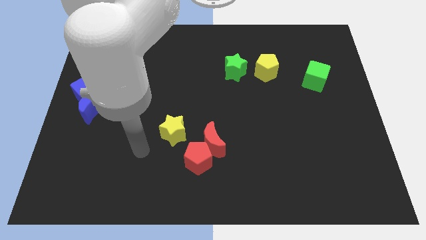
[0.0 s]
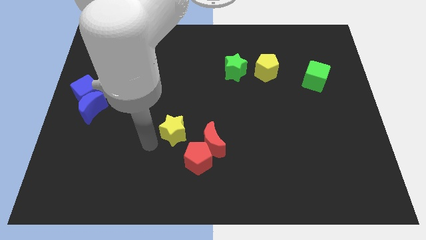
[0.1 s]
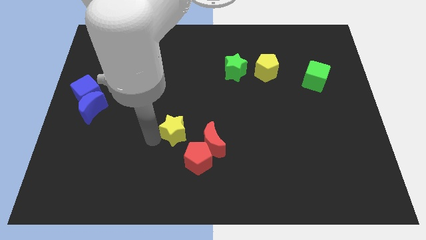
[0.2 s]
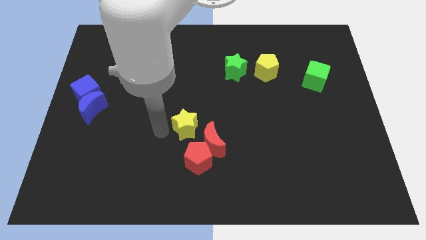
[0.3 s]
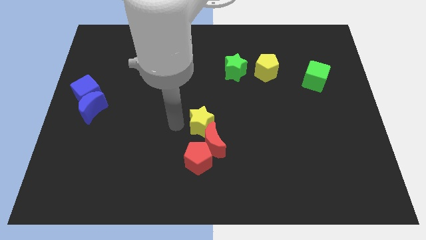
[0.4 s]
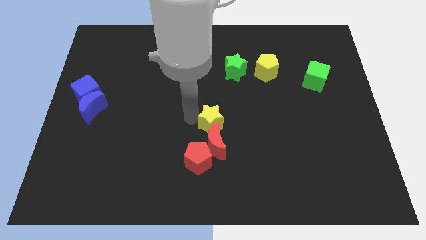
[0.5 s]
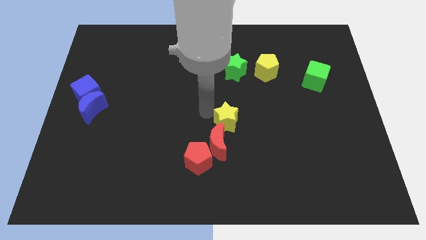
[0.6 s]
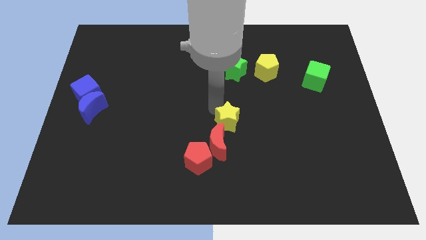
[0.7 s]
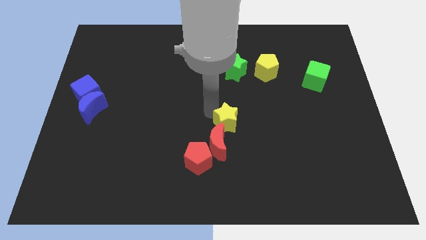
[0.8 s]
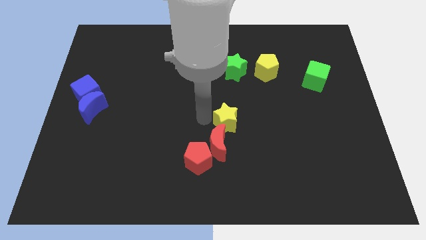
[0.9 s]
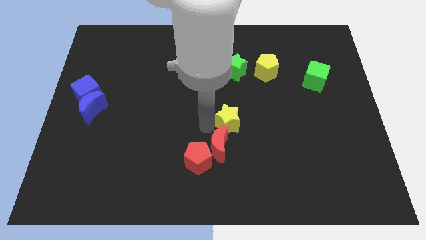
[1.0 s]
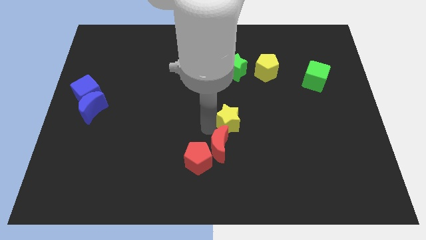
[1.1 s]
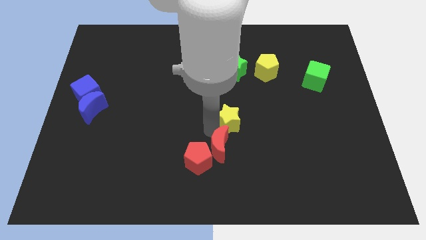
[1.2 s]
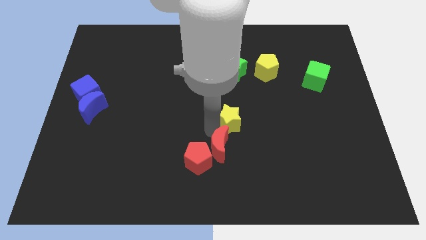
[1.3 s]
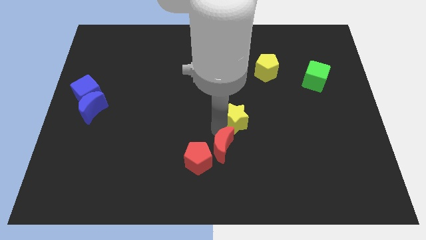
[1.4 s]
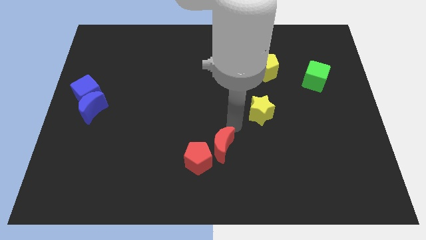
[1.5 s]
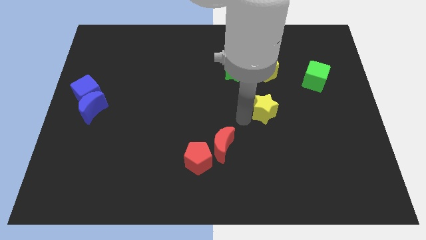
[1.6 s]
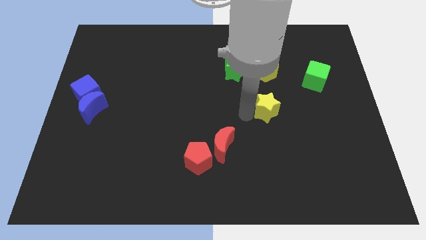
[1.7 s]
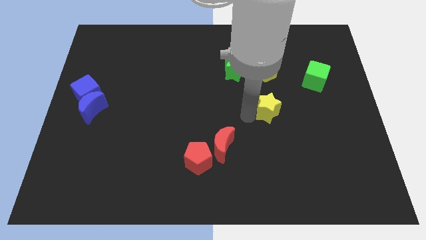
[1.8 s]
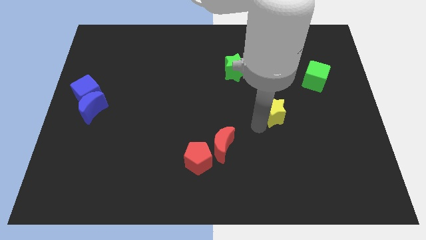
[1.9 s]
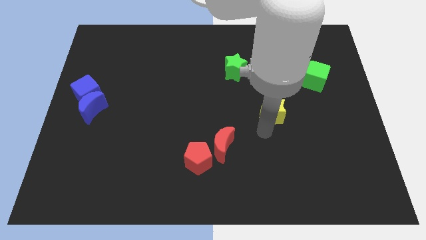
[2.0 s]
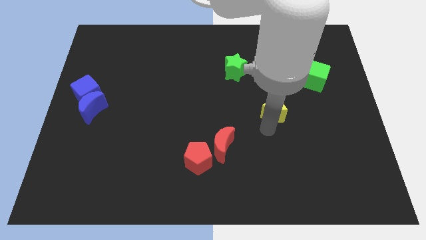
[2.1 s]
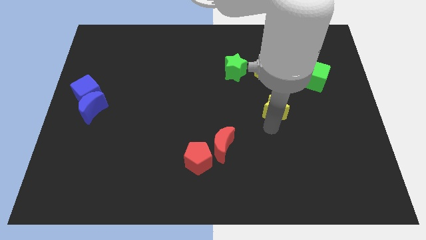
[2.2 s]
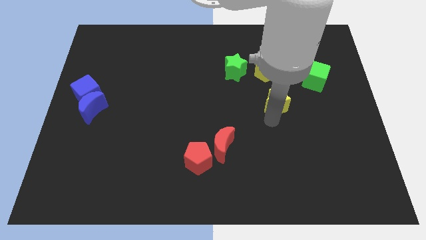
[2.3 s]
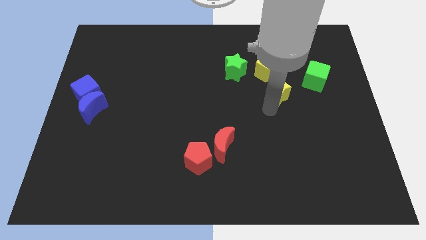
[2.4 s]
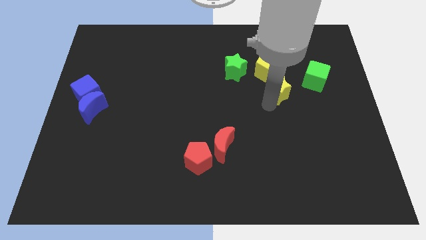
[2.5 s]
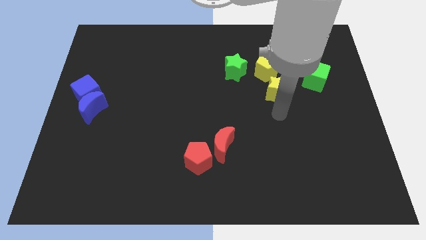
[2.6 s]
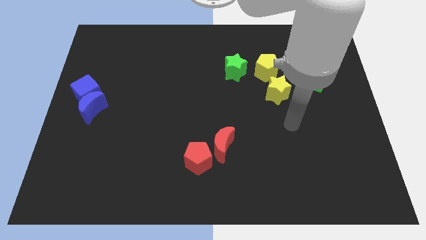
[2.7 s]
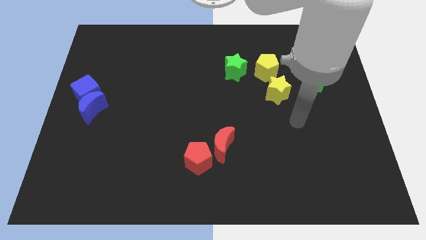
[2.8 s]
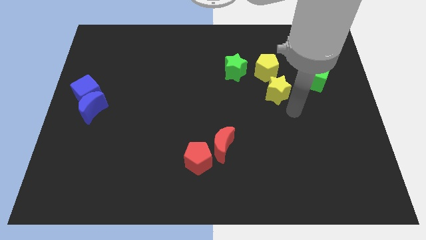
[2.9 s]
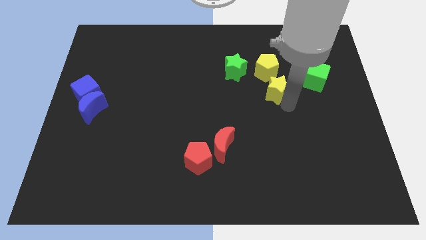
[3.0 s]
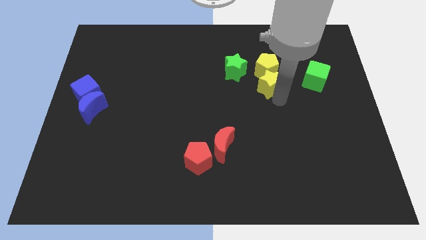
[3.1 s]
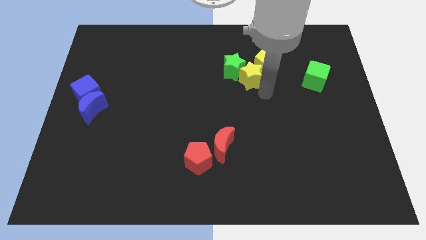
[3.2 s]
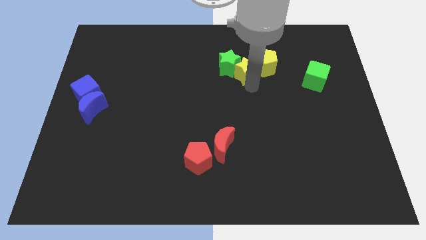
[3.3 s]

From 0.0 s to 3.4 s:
move the yellow star to left of yellow pentagon

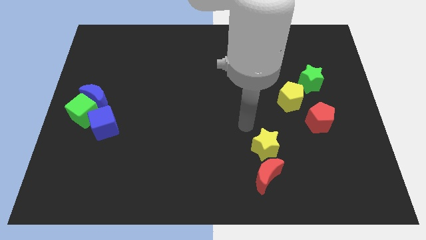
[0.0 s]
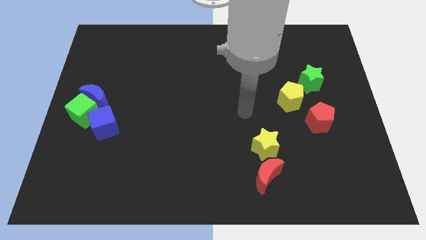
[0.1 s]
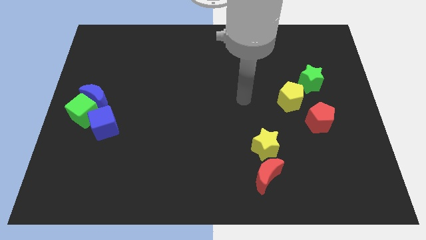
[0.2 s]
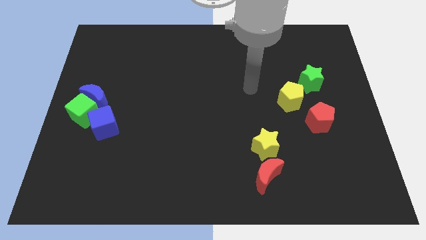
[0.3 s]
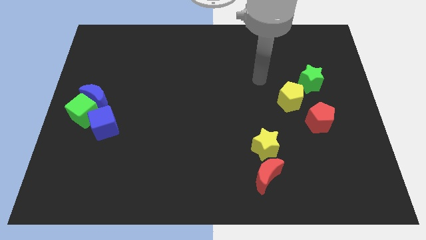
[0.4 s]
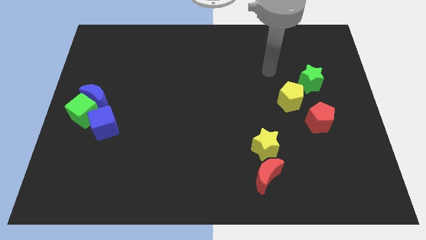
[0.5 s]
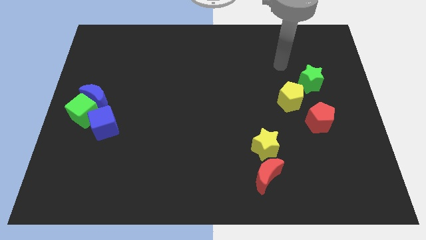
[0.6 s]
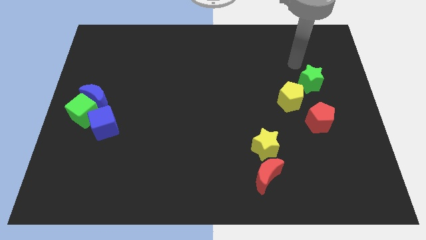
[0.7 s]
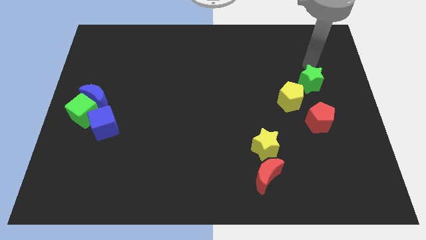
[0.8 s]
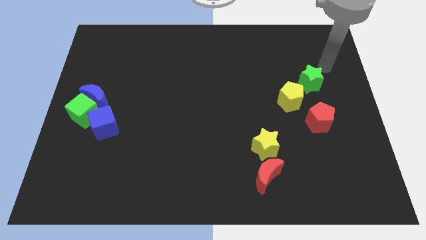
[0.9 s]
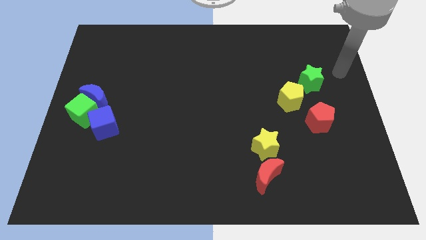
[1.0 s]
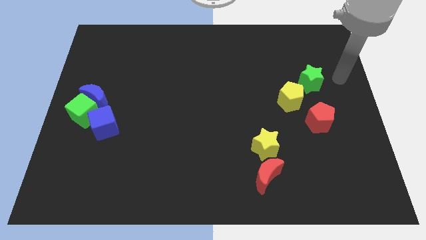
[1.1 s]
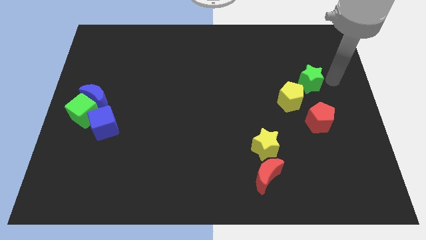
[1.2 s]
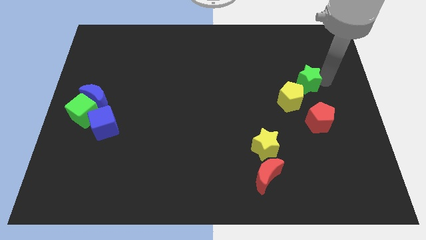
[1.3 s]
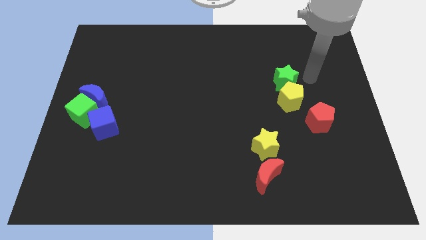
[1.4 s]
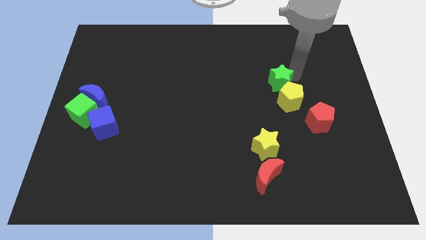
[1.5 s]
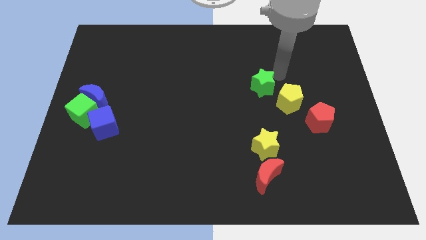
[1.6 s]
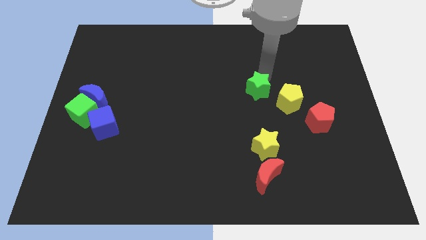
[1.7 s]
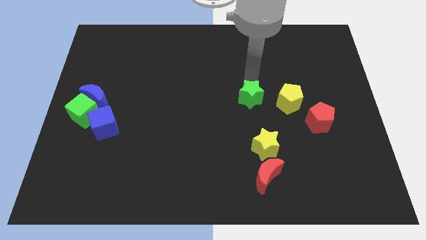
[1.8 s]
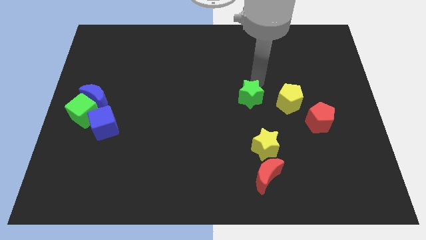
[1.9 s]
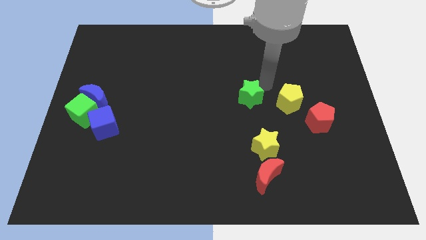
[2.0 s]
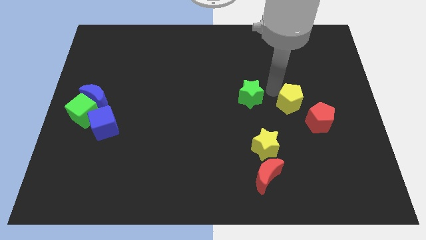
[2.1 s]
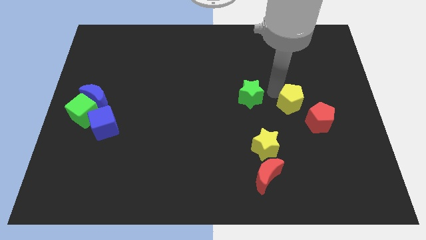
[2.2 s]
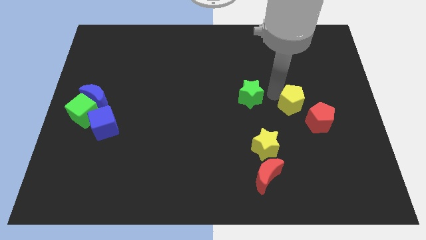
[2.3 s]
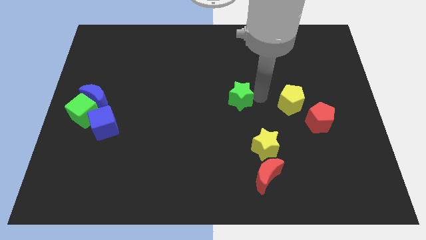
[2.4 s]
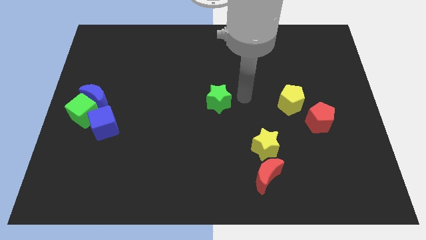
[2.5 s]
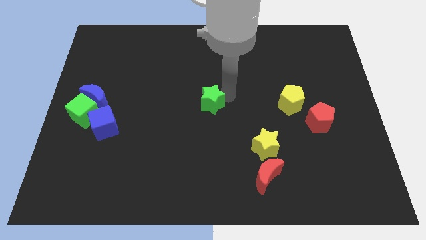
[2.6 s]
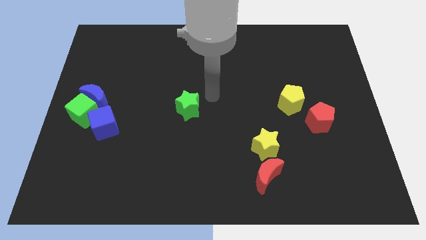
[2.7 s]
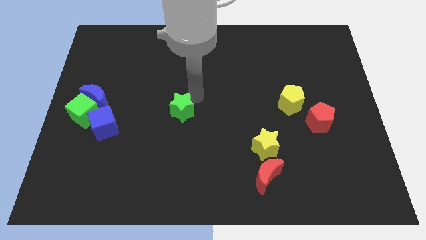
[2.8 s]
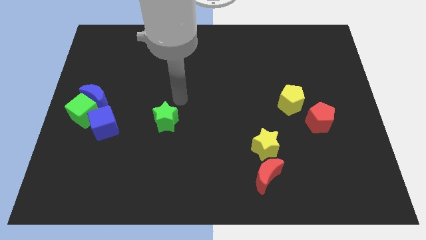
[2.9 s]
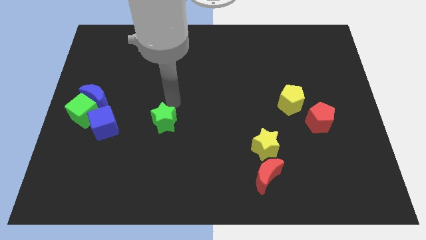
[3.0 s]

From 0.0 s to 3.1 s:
separate the green star and yellow pentagon

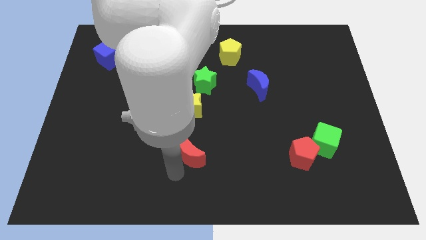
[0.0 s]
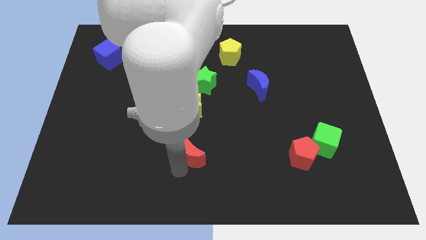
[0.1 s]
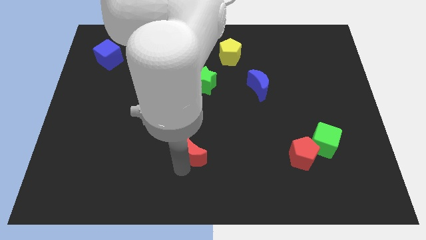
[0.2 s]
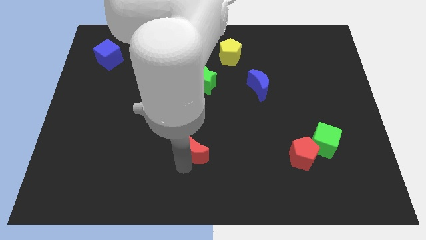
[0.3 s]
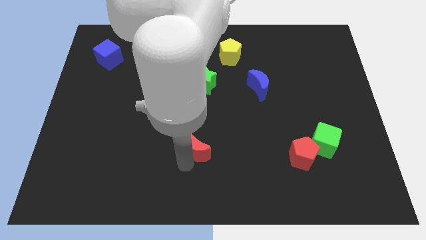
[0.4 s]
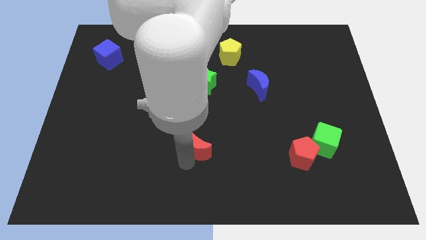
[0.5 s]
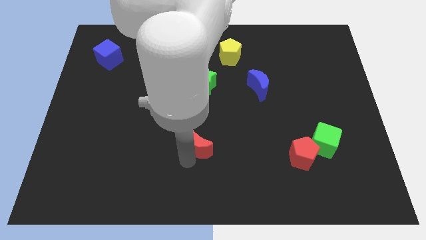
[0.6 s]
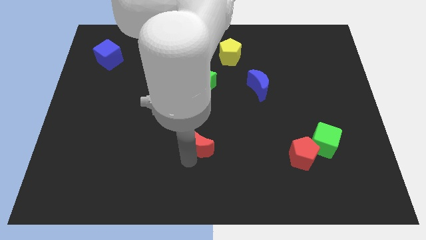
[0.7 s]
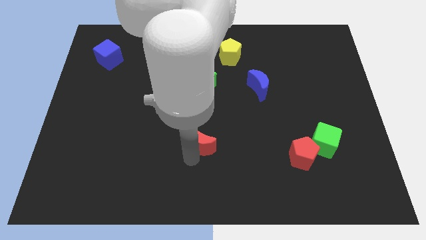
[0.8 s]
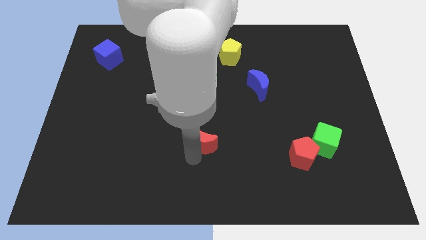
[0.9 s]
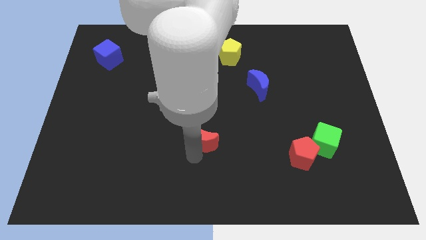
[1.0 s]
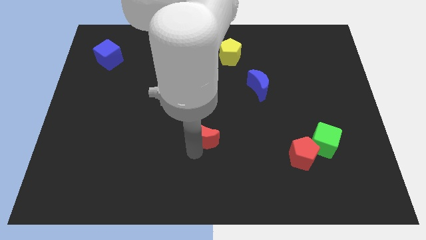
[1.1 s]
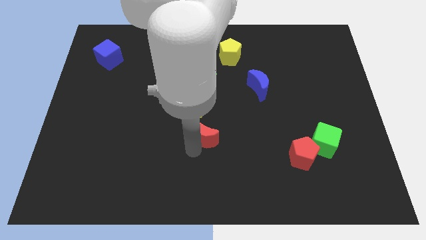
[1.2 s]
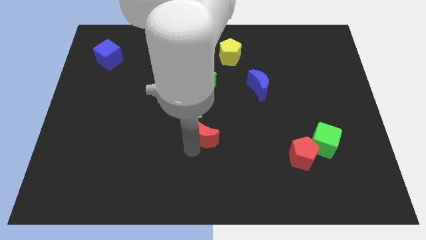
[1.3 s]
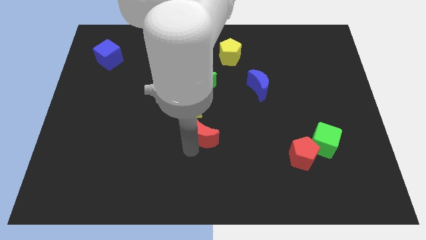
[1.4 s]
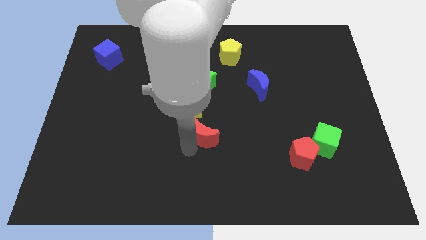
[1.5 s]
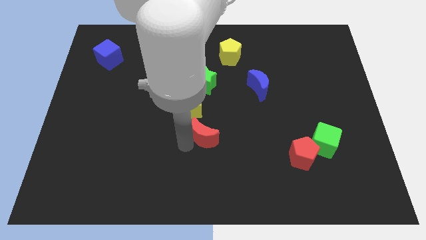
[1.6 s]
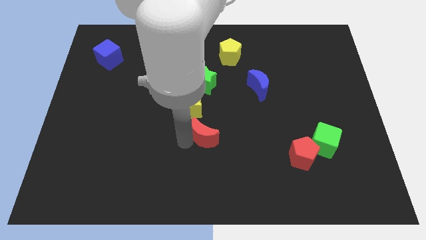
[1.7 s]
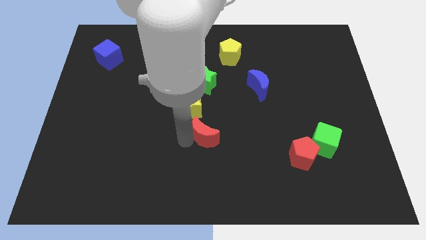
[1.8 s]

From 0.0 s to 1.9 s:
move the red moon closer to the yellow star

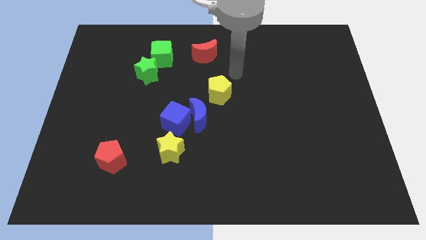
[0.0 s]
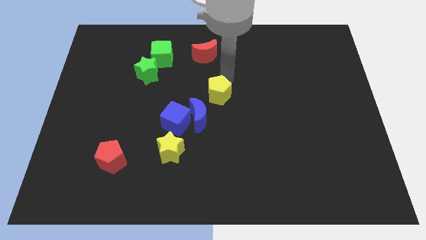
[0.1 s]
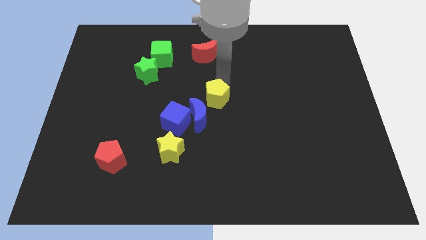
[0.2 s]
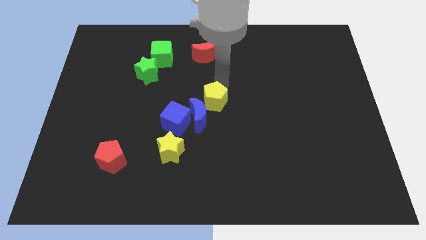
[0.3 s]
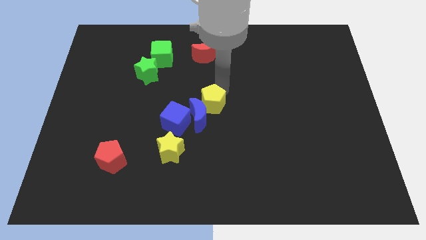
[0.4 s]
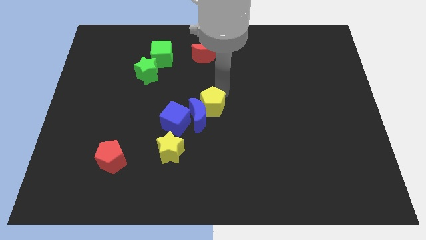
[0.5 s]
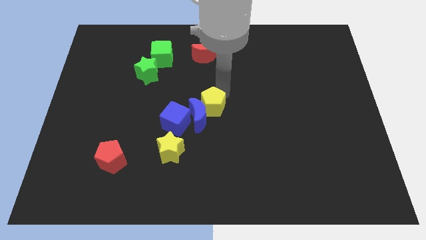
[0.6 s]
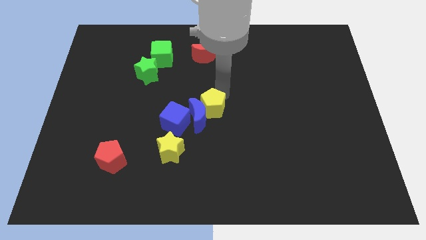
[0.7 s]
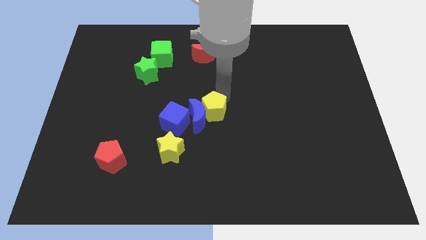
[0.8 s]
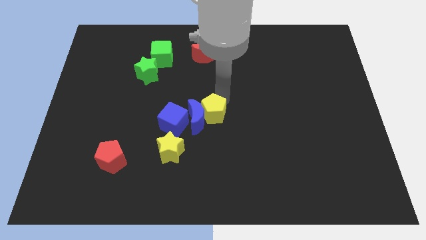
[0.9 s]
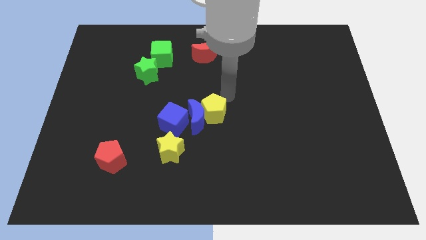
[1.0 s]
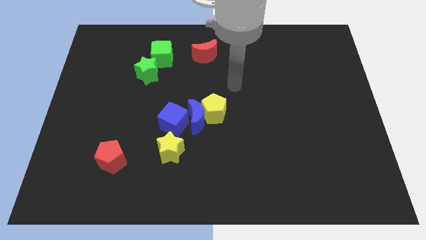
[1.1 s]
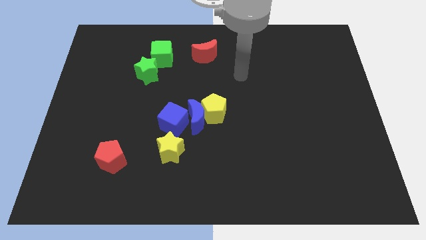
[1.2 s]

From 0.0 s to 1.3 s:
push the yellow pentagon towards the right side of blue crescent
